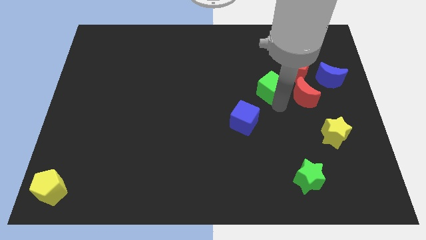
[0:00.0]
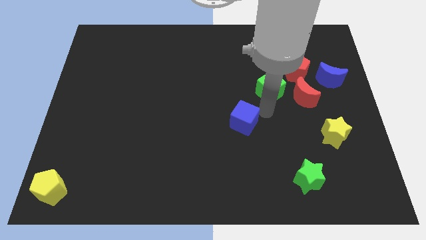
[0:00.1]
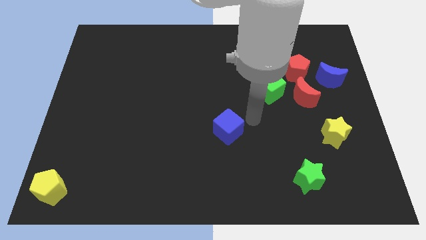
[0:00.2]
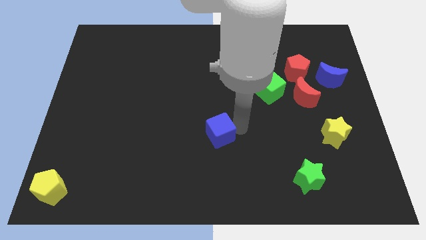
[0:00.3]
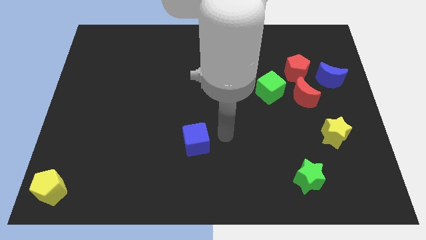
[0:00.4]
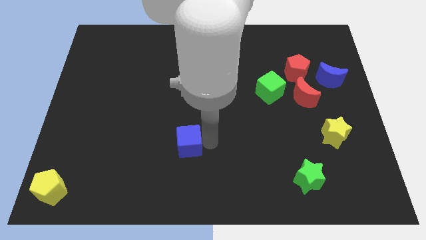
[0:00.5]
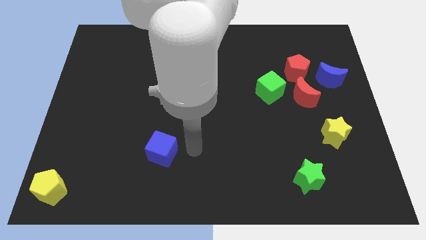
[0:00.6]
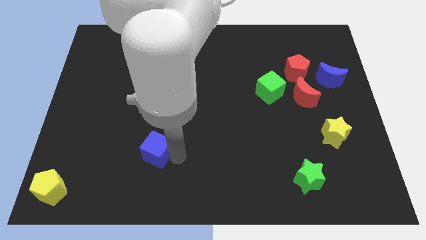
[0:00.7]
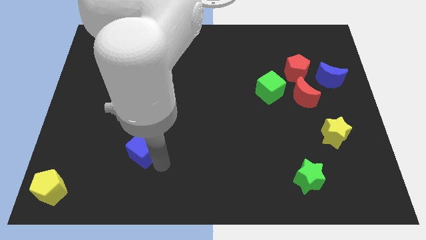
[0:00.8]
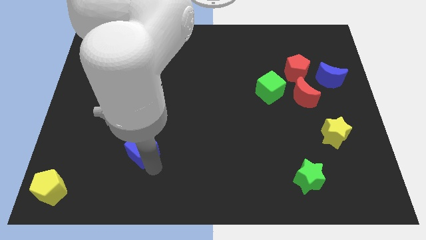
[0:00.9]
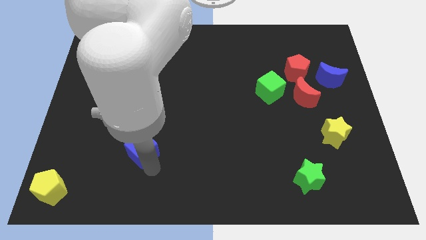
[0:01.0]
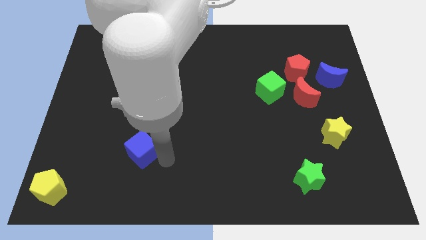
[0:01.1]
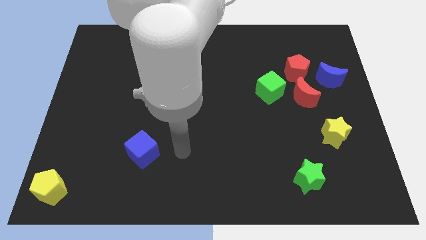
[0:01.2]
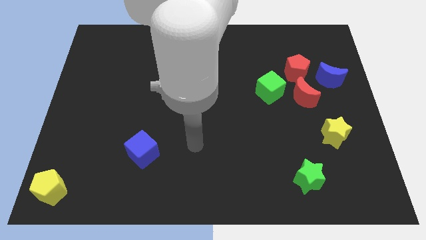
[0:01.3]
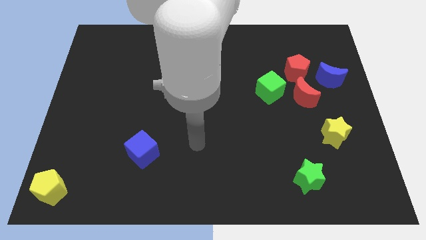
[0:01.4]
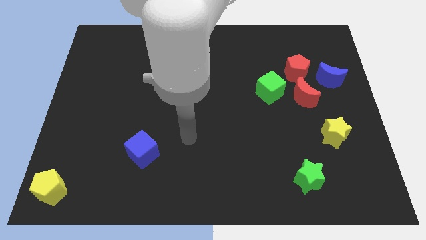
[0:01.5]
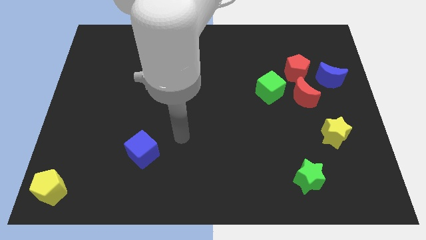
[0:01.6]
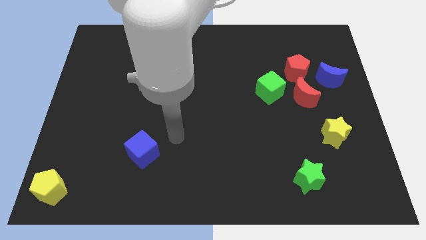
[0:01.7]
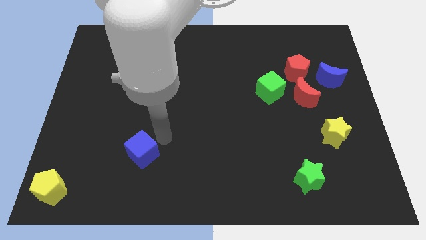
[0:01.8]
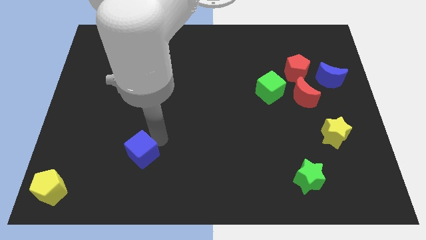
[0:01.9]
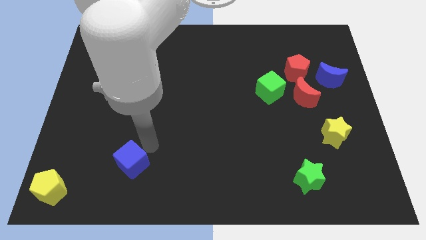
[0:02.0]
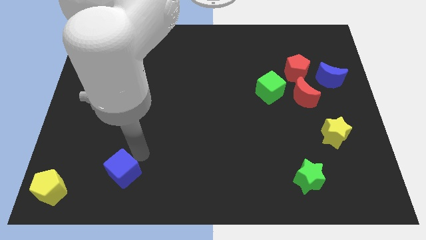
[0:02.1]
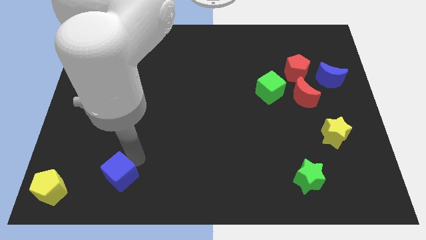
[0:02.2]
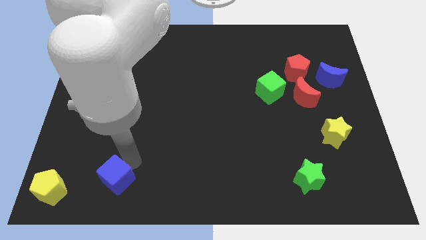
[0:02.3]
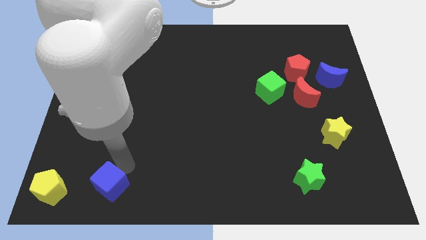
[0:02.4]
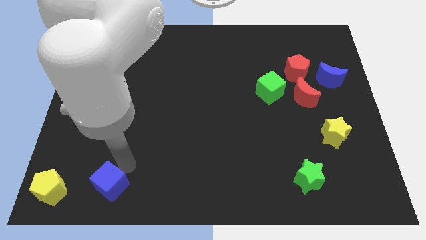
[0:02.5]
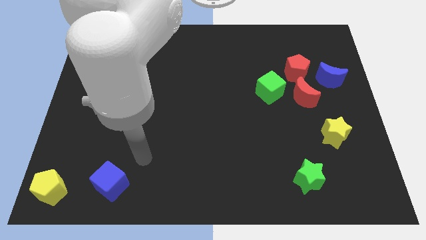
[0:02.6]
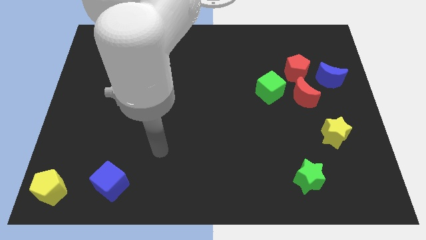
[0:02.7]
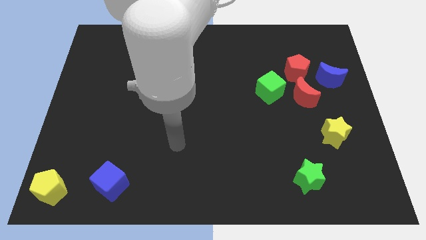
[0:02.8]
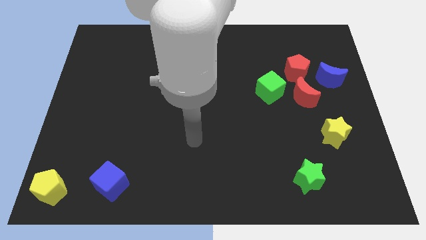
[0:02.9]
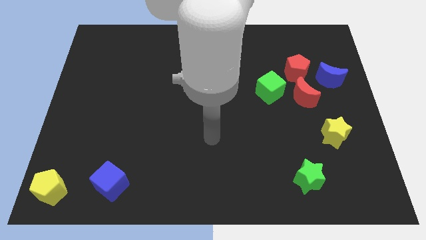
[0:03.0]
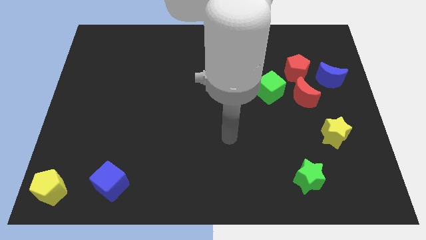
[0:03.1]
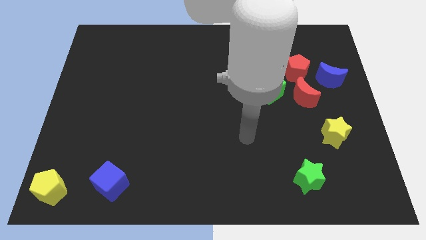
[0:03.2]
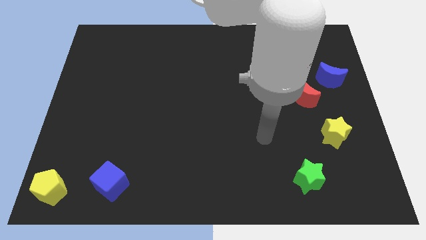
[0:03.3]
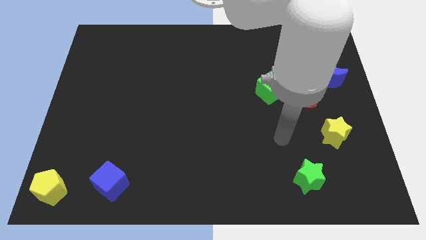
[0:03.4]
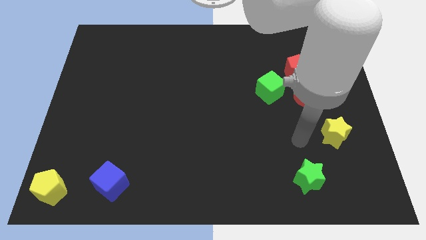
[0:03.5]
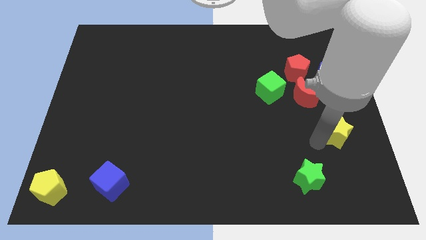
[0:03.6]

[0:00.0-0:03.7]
move the blue cube towards the right side of the yellow pentagon

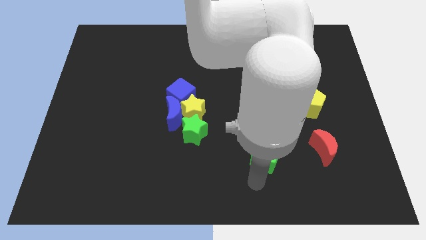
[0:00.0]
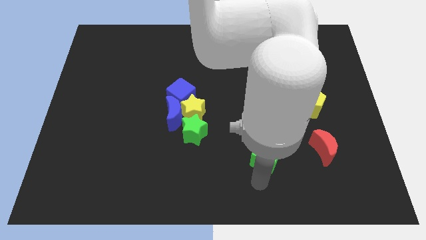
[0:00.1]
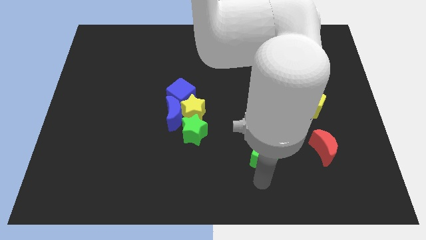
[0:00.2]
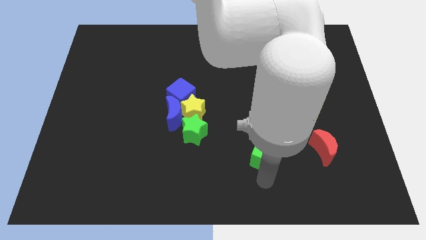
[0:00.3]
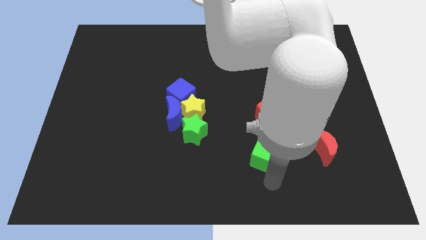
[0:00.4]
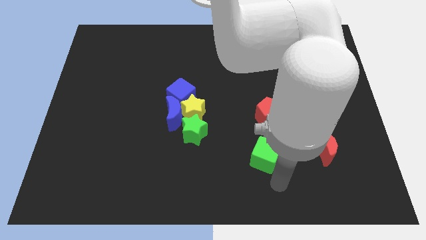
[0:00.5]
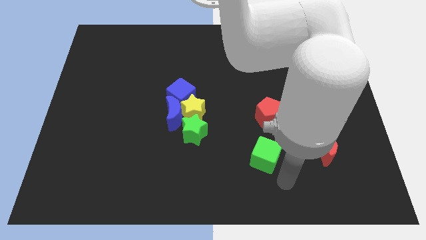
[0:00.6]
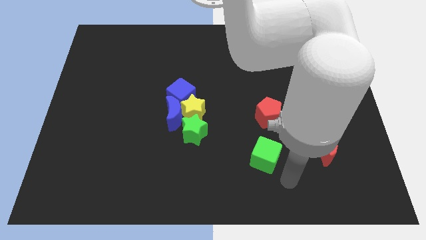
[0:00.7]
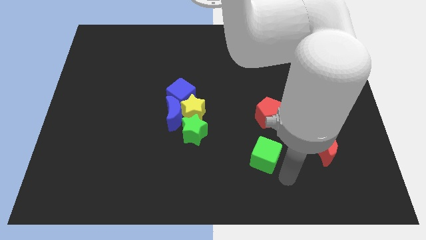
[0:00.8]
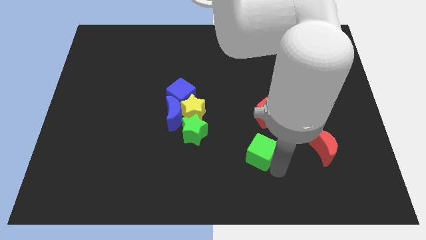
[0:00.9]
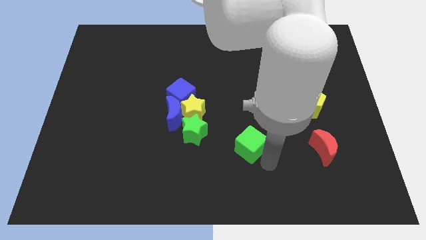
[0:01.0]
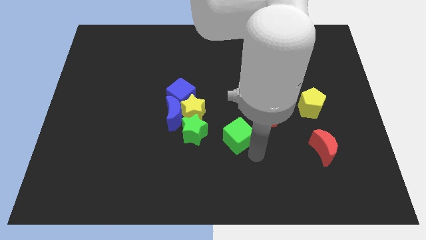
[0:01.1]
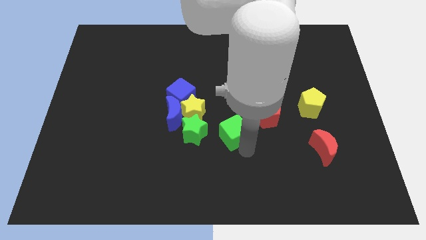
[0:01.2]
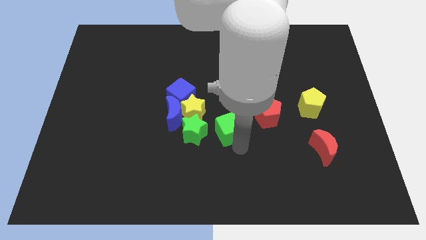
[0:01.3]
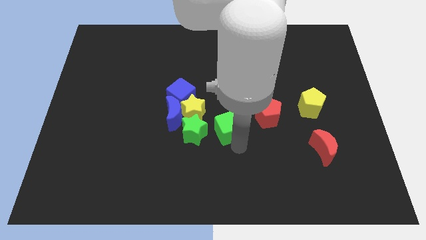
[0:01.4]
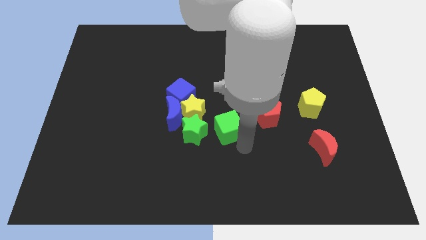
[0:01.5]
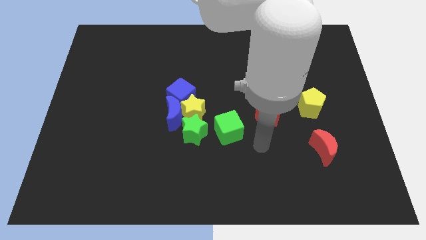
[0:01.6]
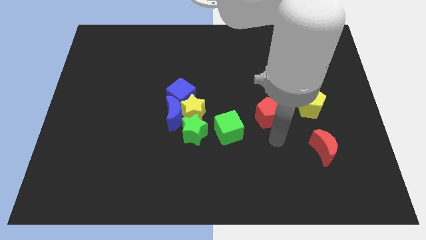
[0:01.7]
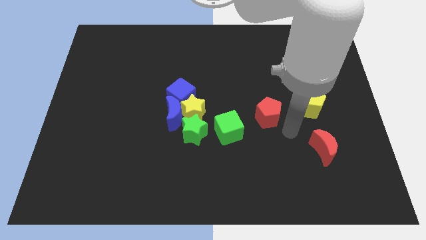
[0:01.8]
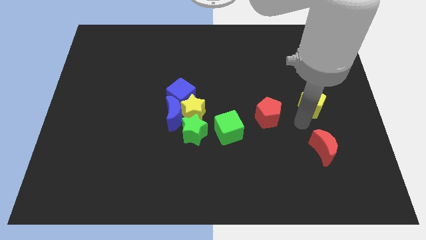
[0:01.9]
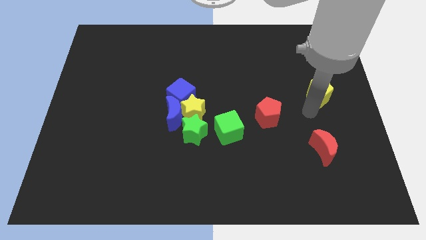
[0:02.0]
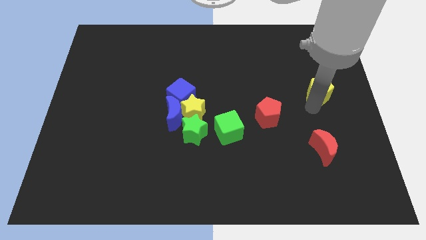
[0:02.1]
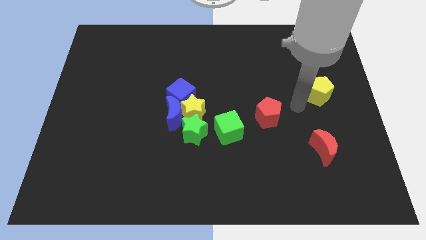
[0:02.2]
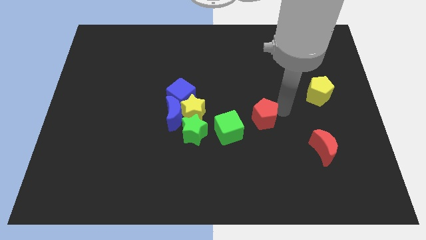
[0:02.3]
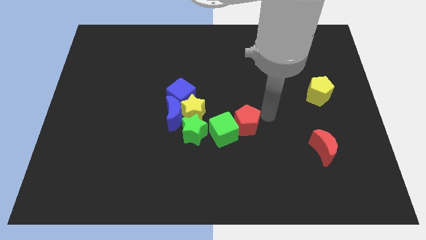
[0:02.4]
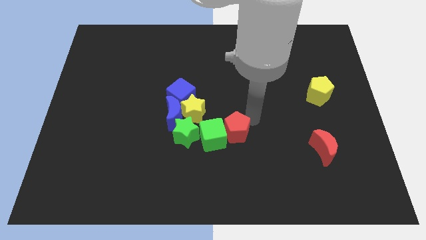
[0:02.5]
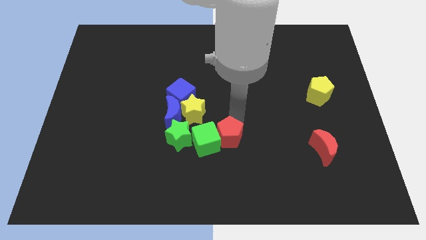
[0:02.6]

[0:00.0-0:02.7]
push red pentagon slightly towards left

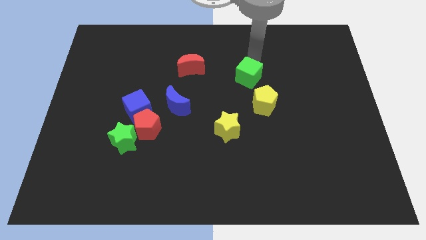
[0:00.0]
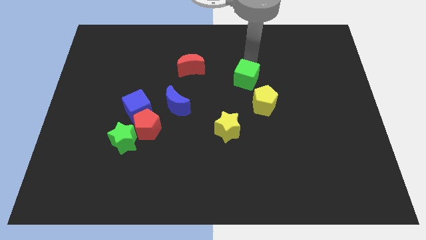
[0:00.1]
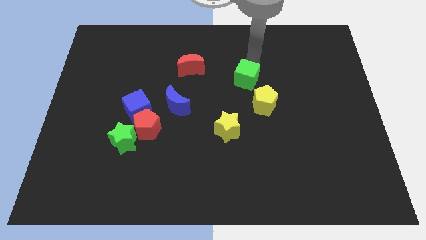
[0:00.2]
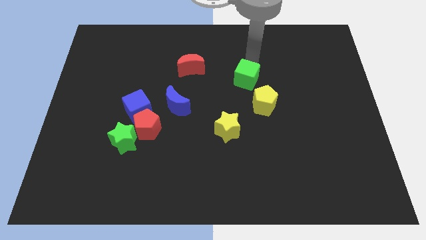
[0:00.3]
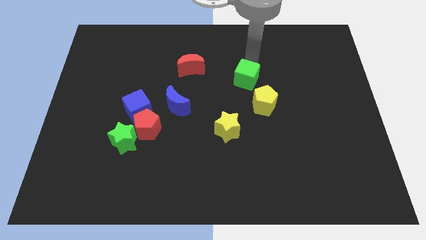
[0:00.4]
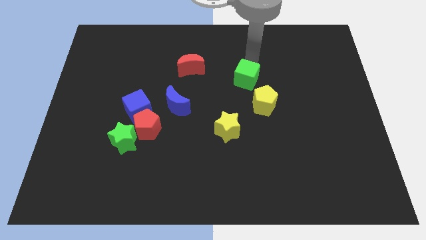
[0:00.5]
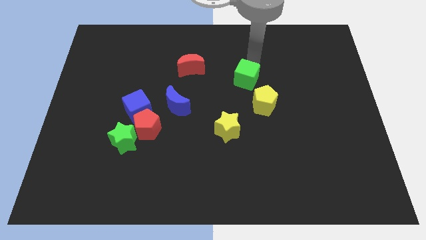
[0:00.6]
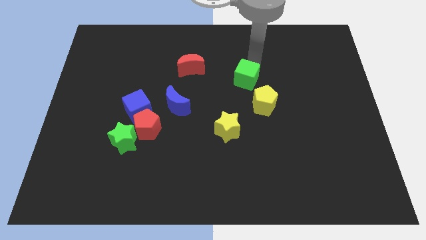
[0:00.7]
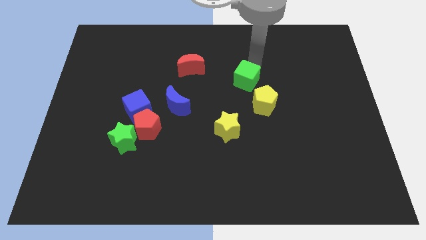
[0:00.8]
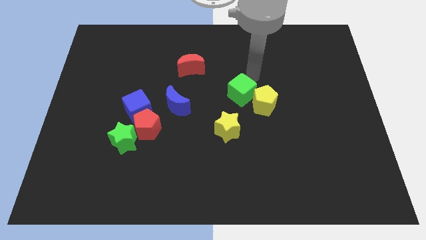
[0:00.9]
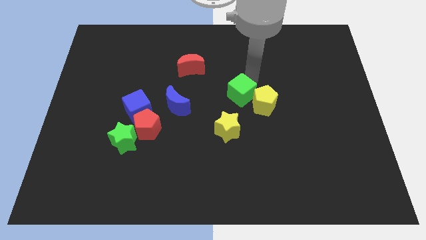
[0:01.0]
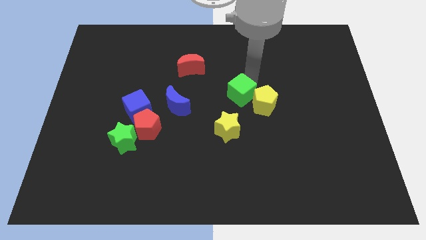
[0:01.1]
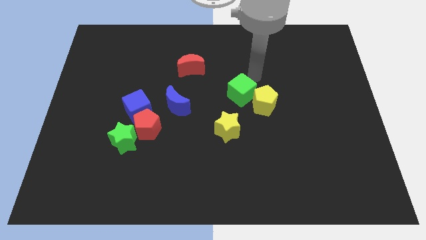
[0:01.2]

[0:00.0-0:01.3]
move the green cube to the top left side of the yellow pentagon

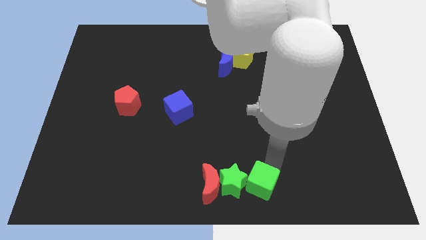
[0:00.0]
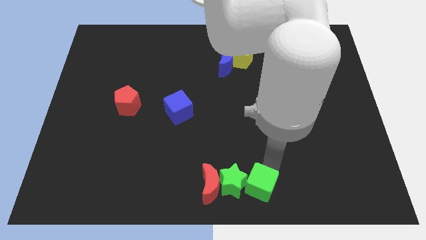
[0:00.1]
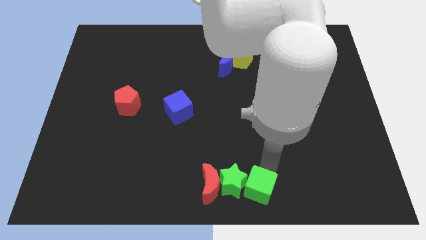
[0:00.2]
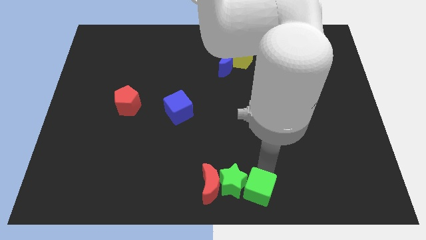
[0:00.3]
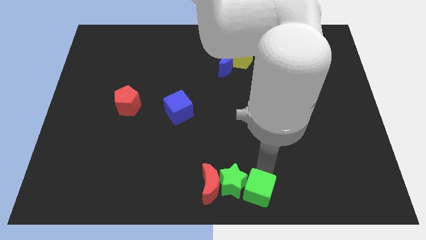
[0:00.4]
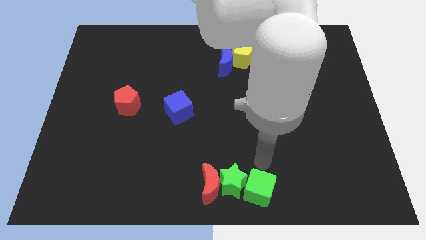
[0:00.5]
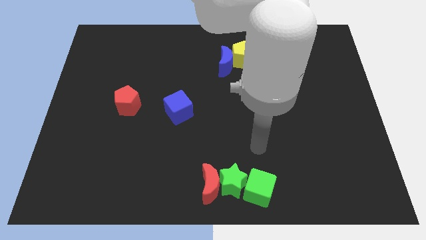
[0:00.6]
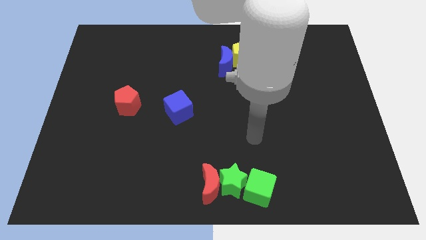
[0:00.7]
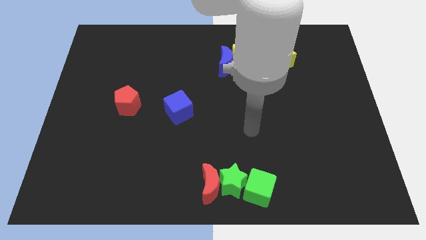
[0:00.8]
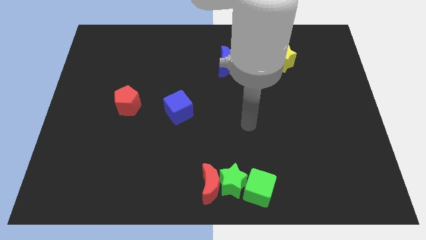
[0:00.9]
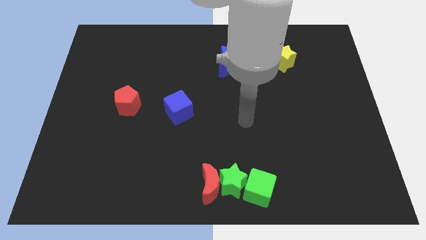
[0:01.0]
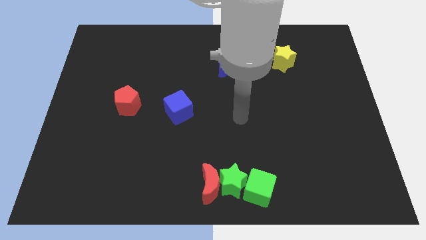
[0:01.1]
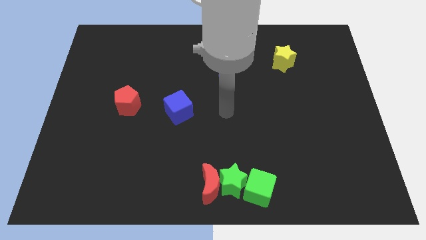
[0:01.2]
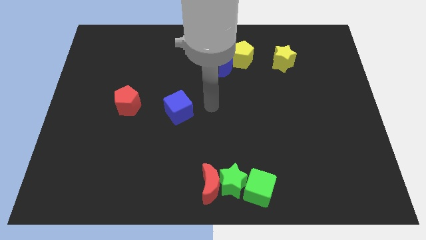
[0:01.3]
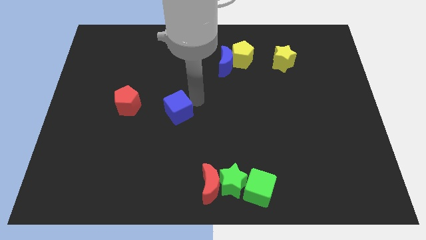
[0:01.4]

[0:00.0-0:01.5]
point your arm at the right of the blue cube
